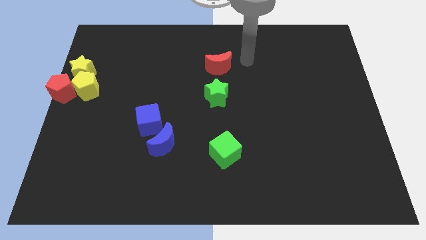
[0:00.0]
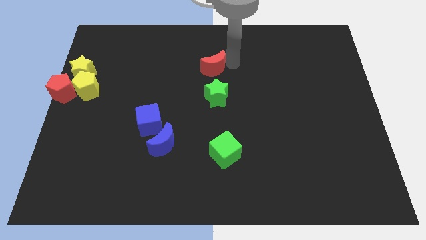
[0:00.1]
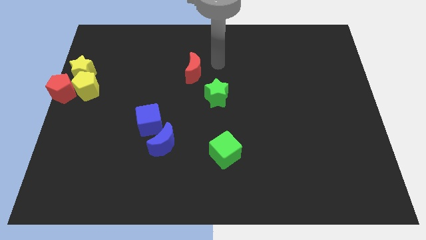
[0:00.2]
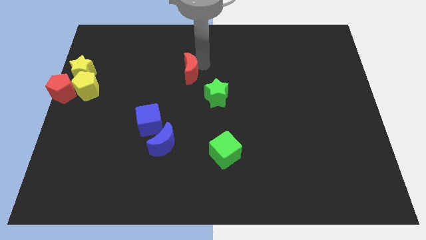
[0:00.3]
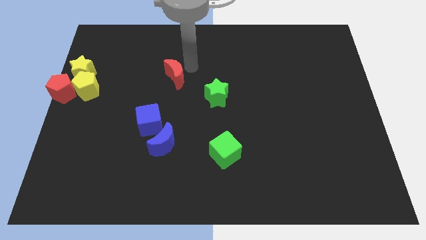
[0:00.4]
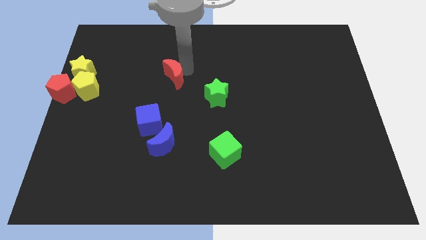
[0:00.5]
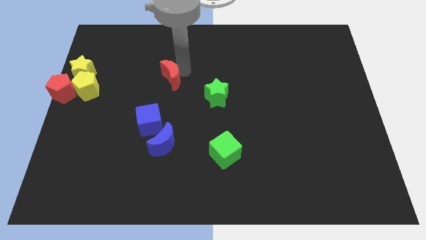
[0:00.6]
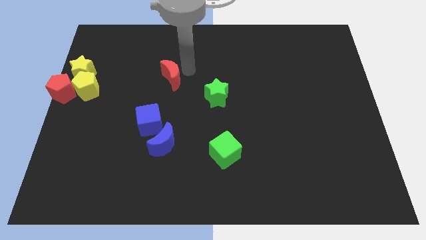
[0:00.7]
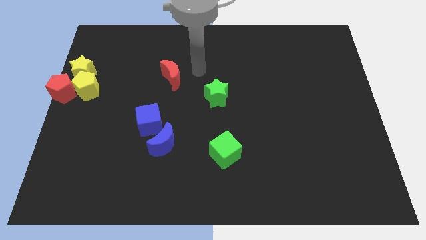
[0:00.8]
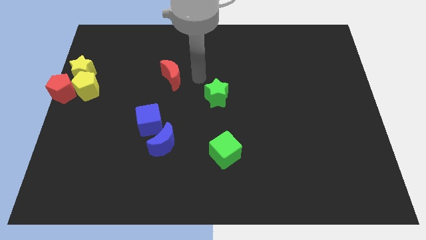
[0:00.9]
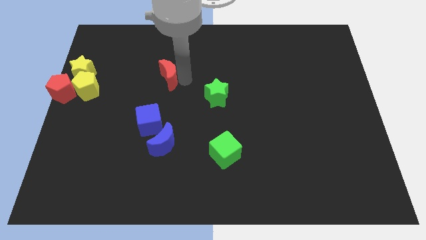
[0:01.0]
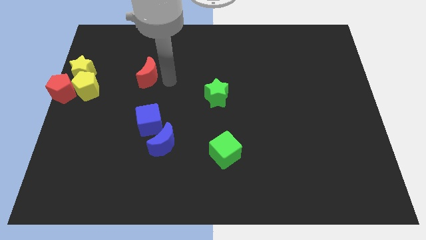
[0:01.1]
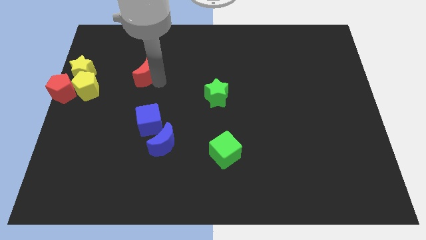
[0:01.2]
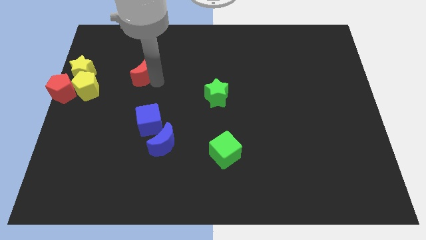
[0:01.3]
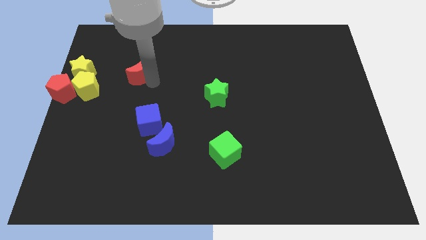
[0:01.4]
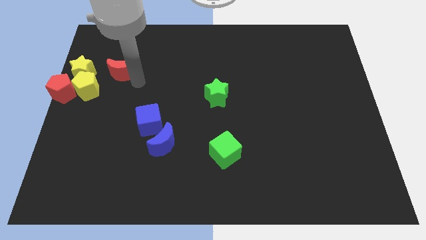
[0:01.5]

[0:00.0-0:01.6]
move the red crescent diagonally on the top left side of the blue cube

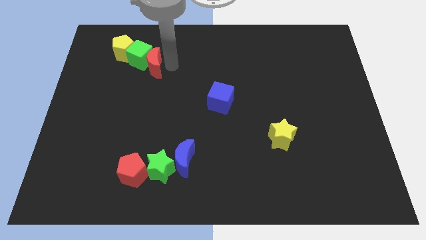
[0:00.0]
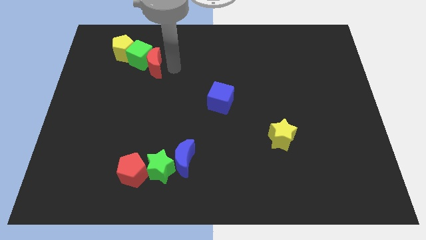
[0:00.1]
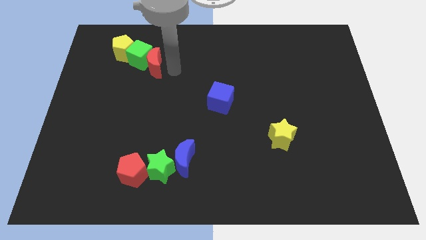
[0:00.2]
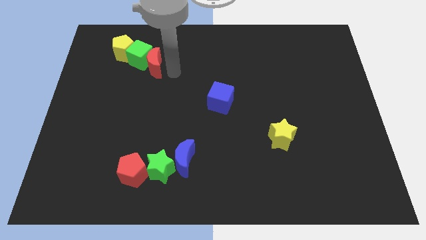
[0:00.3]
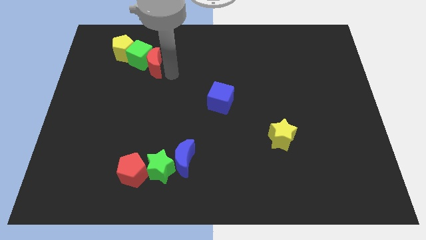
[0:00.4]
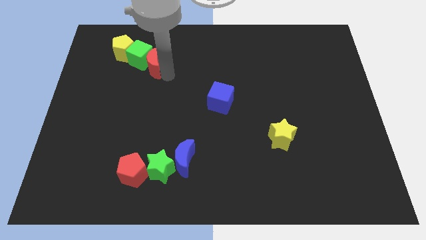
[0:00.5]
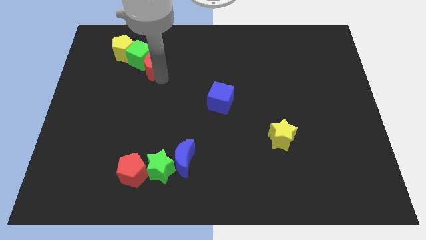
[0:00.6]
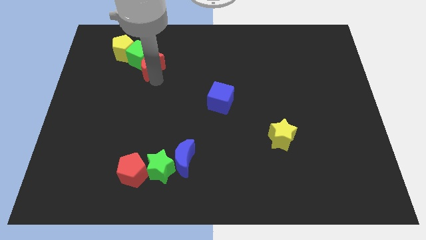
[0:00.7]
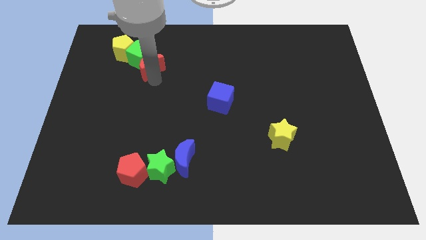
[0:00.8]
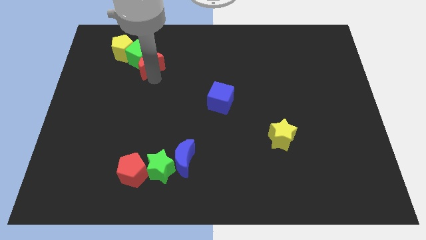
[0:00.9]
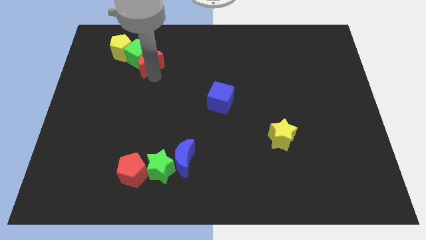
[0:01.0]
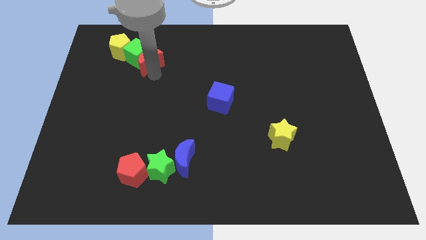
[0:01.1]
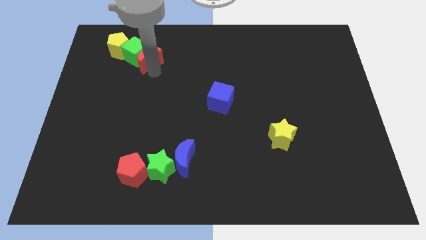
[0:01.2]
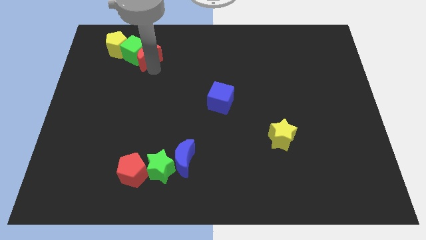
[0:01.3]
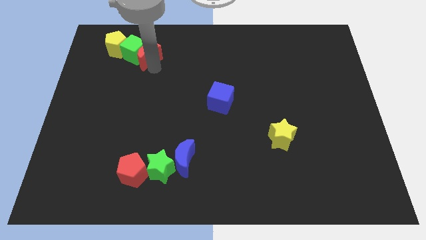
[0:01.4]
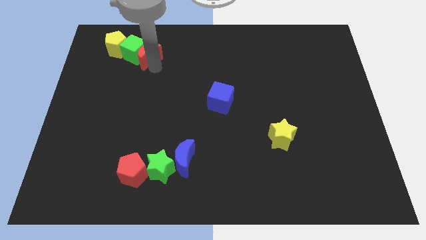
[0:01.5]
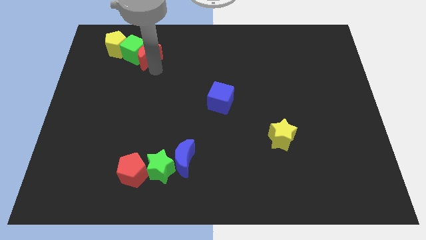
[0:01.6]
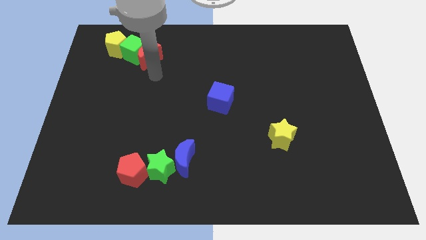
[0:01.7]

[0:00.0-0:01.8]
push red moon and other blocks upwards

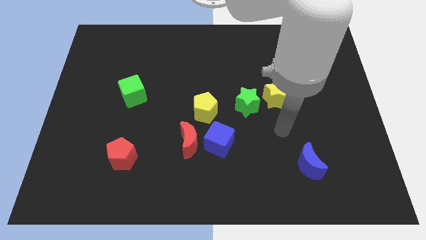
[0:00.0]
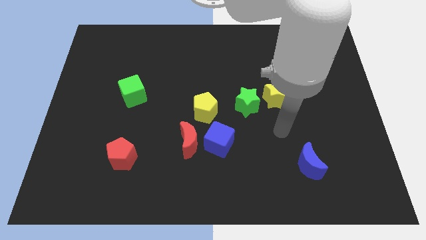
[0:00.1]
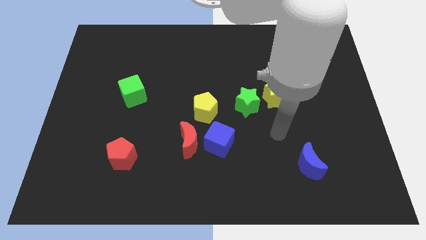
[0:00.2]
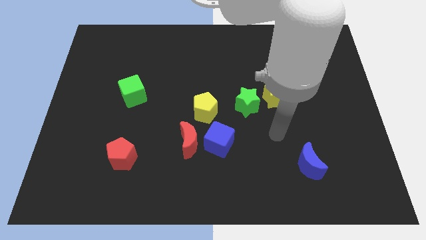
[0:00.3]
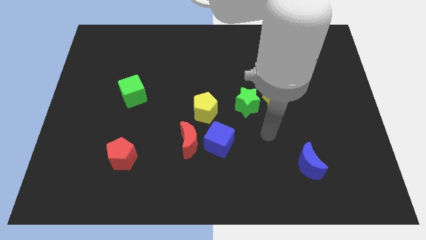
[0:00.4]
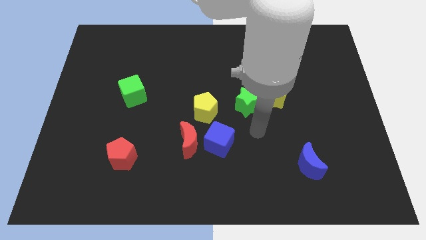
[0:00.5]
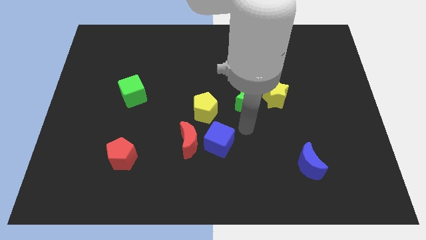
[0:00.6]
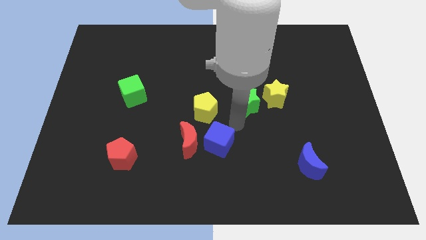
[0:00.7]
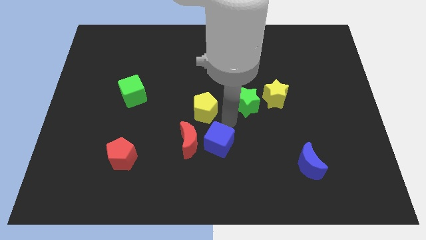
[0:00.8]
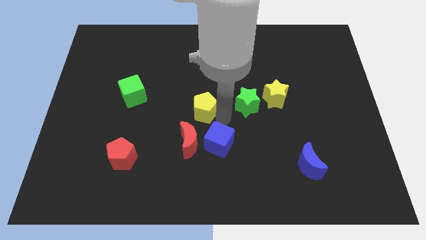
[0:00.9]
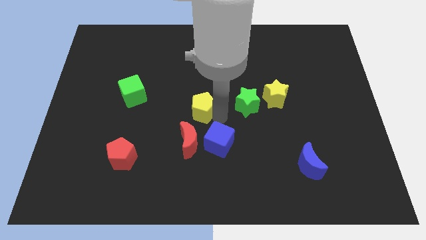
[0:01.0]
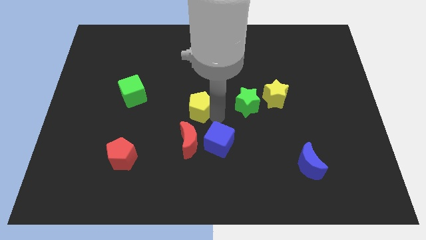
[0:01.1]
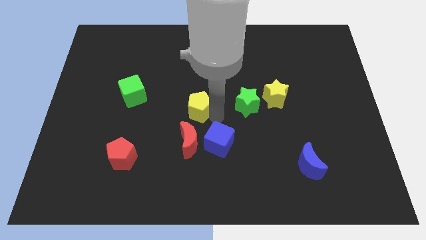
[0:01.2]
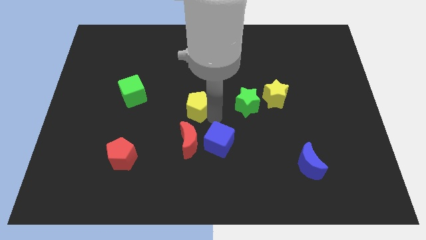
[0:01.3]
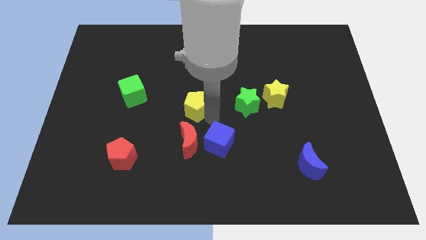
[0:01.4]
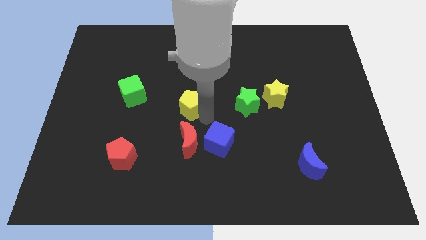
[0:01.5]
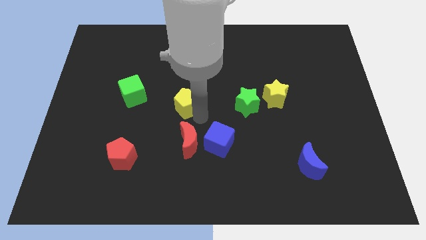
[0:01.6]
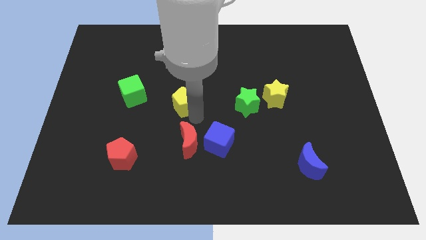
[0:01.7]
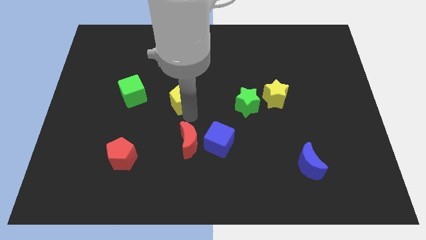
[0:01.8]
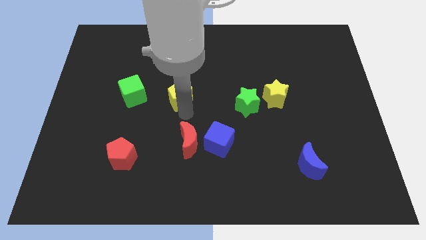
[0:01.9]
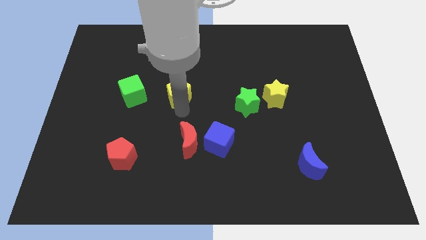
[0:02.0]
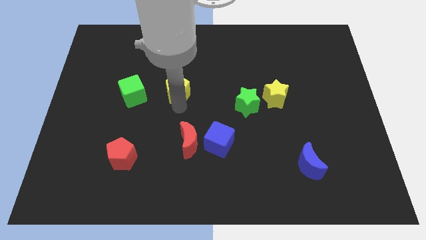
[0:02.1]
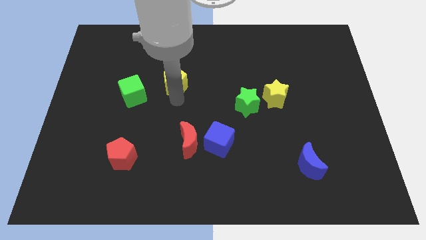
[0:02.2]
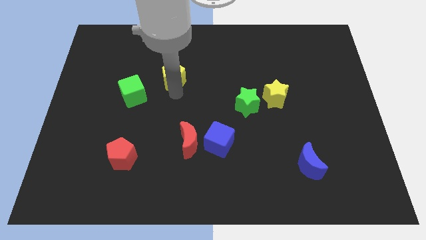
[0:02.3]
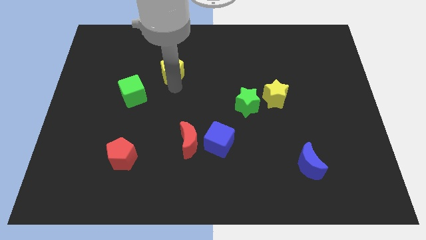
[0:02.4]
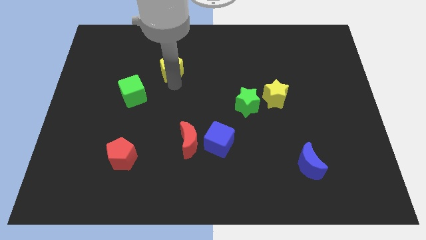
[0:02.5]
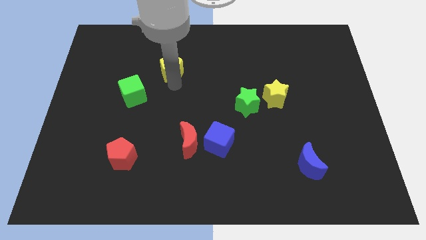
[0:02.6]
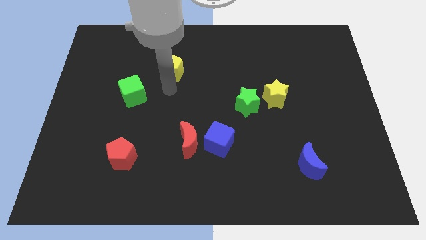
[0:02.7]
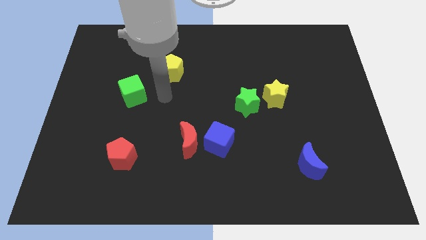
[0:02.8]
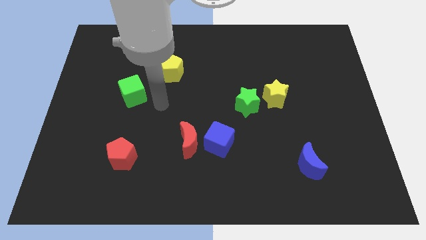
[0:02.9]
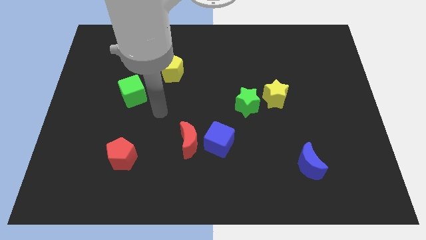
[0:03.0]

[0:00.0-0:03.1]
move yellow pentagon to the top right of the green cube

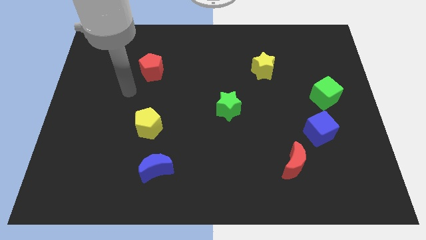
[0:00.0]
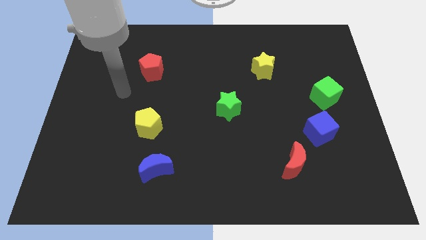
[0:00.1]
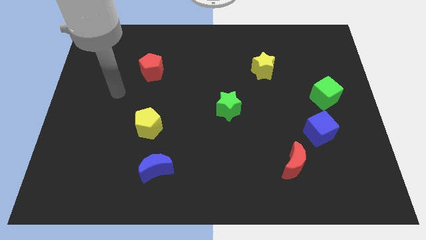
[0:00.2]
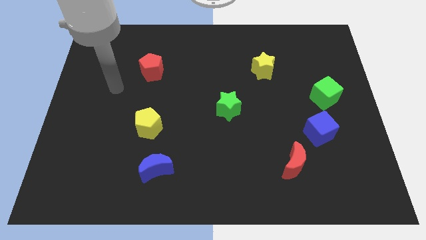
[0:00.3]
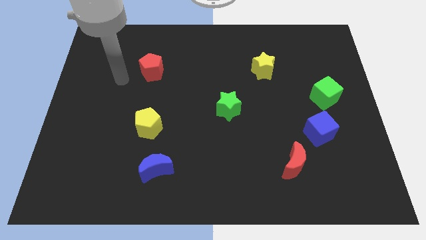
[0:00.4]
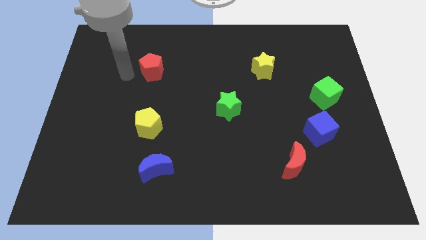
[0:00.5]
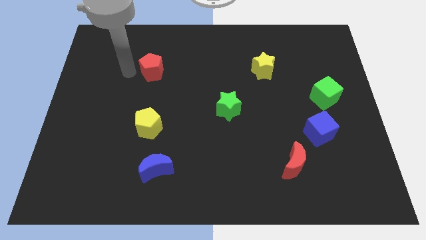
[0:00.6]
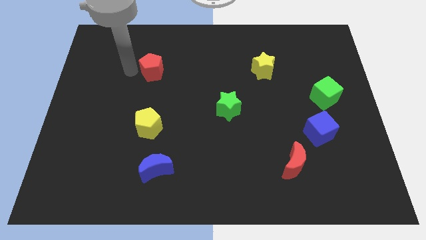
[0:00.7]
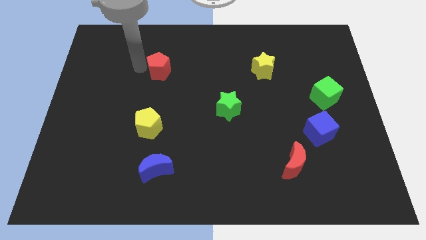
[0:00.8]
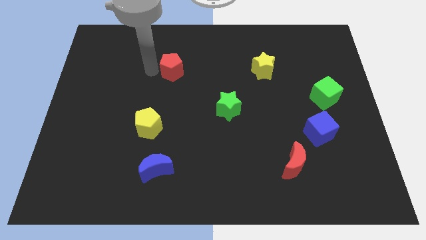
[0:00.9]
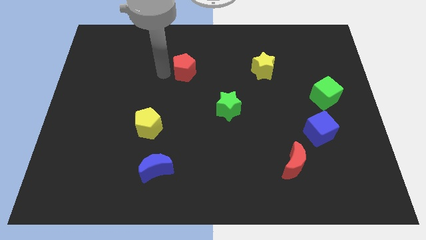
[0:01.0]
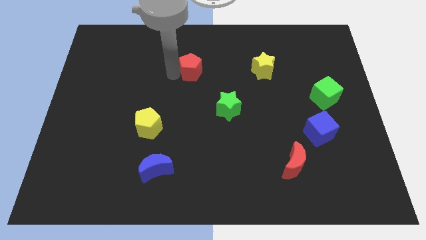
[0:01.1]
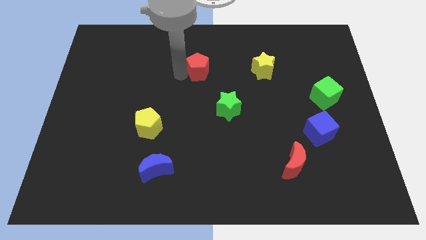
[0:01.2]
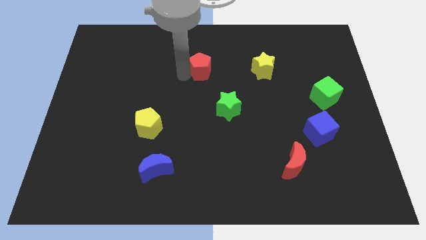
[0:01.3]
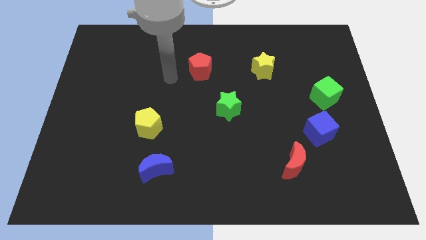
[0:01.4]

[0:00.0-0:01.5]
push the red pentagon towards the left side of the yellow star

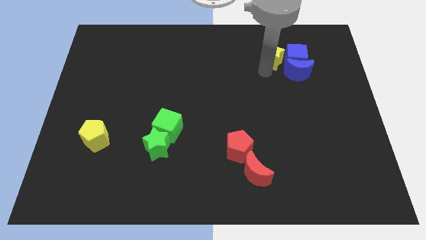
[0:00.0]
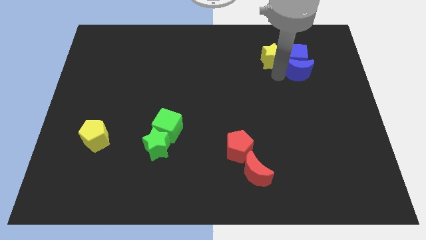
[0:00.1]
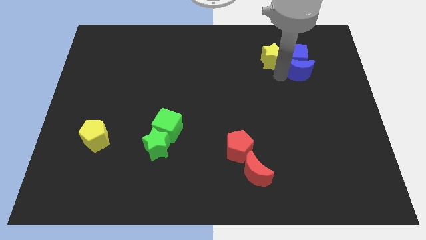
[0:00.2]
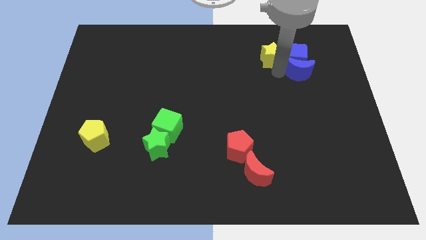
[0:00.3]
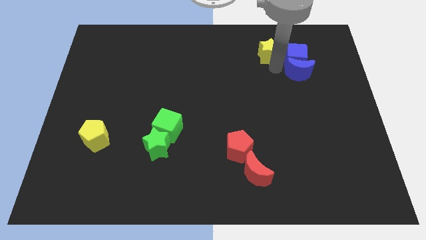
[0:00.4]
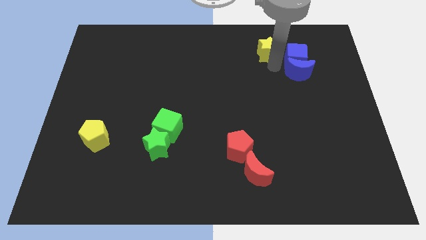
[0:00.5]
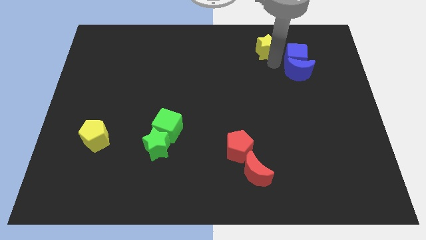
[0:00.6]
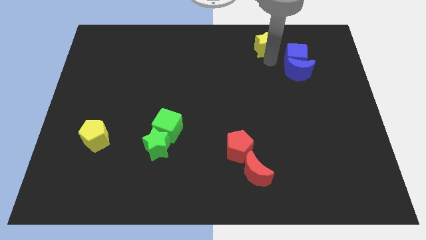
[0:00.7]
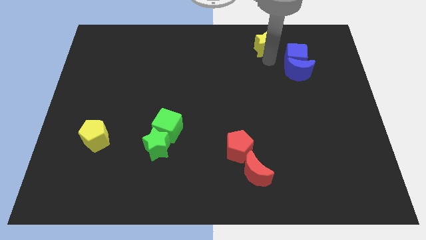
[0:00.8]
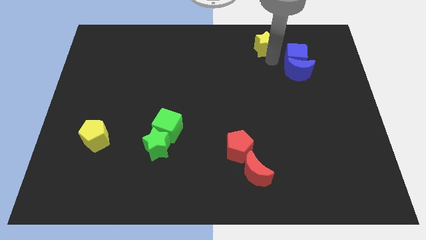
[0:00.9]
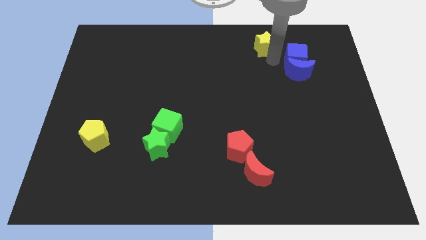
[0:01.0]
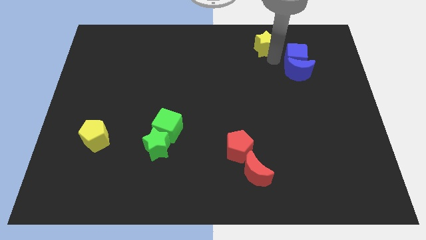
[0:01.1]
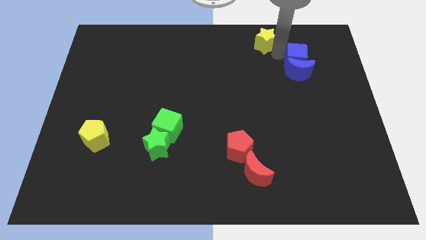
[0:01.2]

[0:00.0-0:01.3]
move the yellow star to the top center
